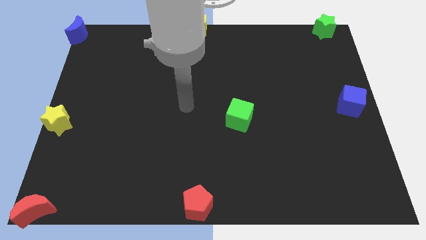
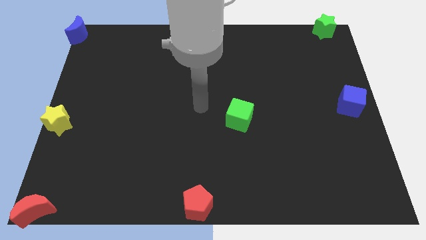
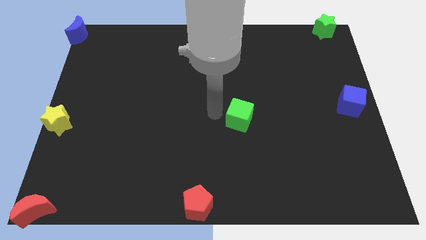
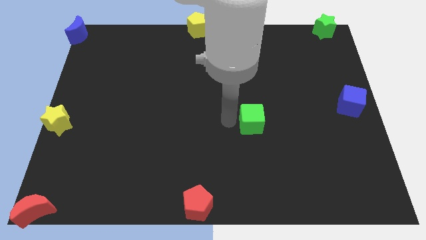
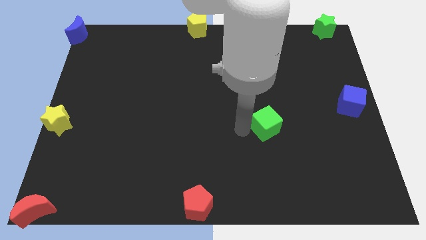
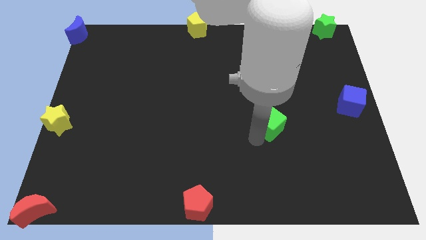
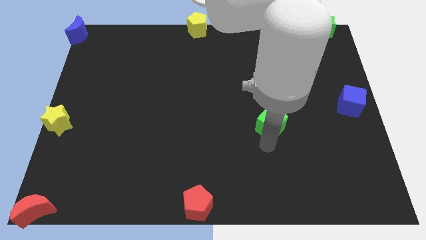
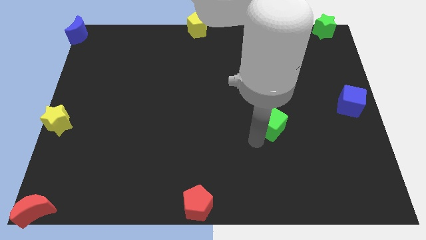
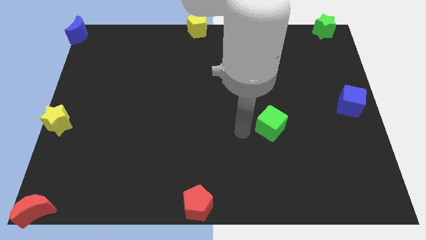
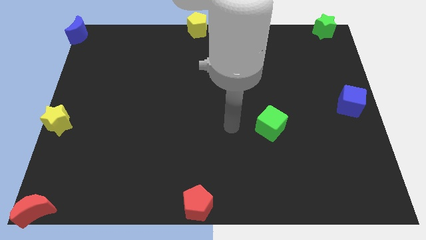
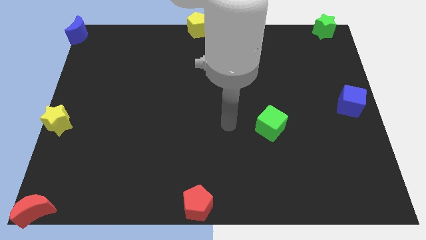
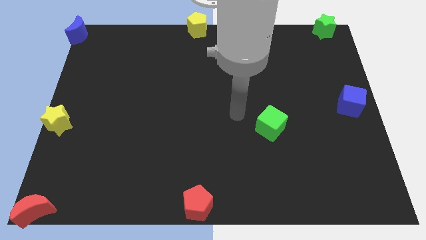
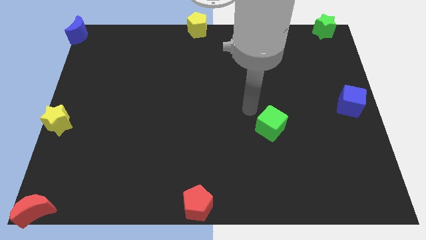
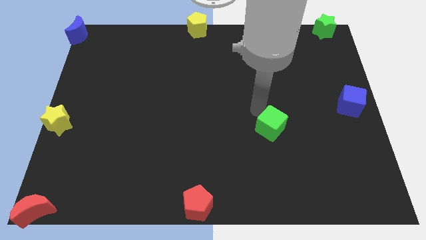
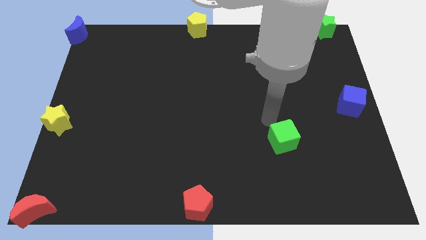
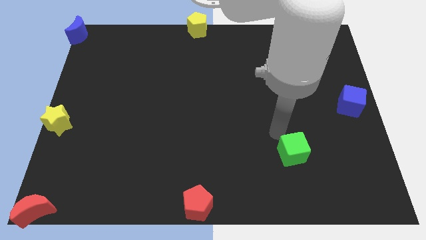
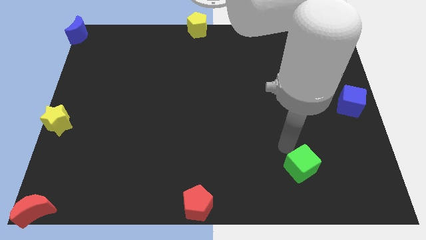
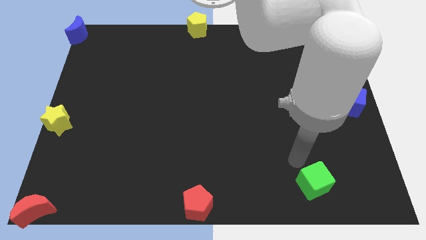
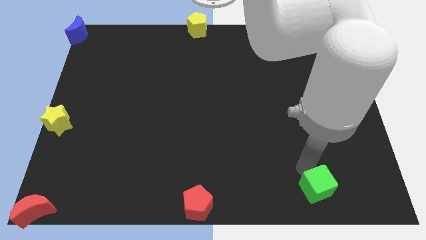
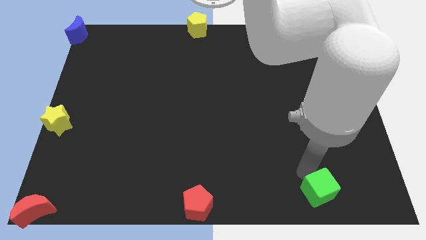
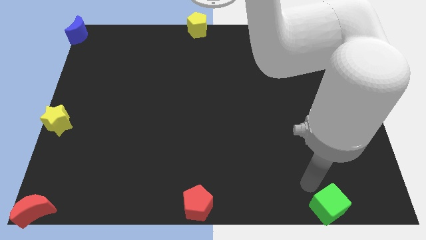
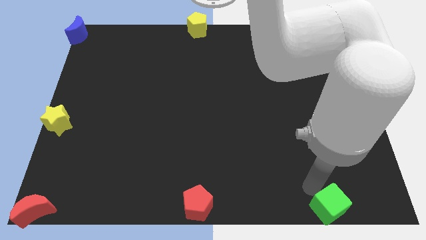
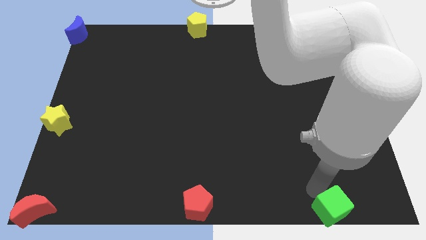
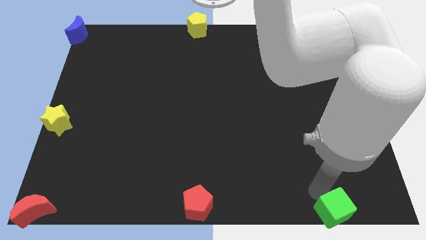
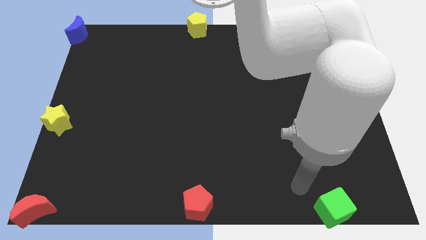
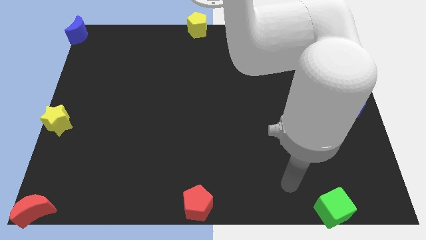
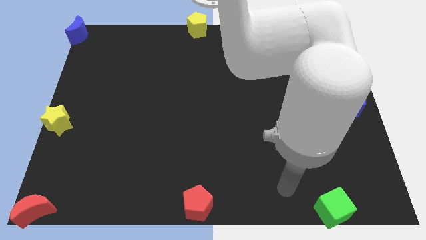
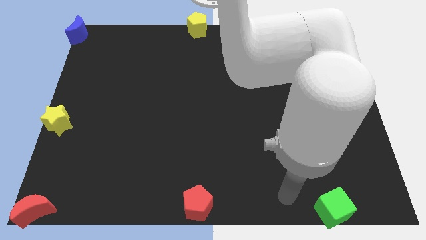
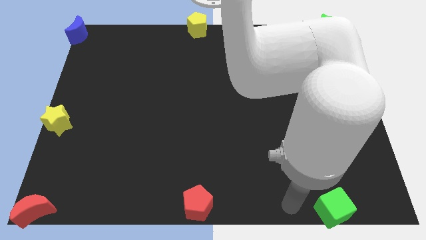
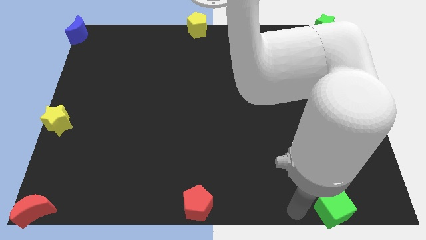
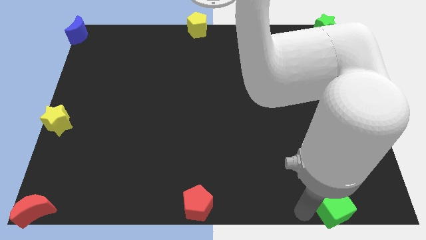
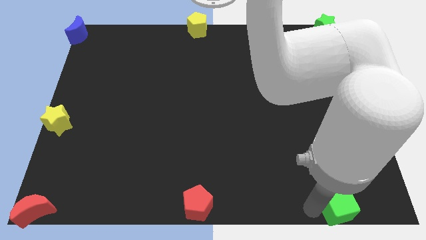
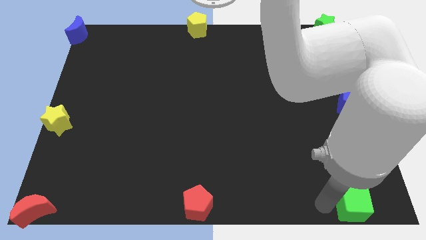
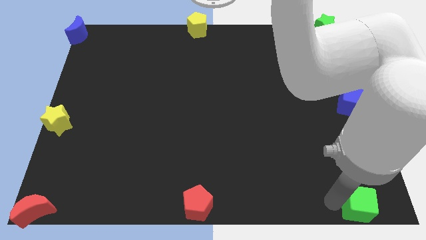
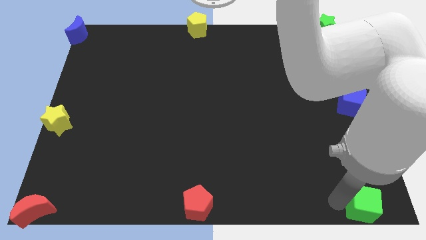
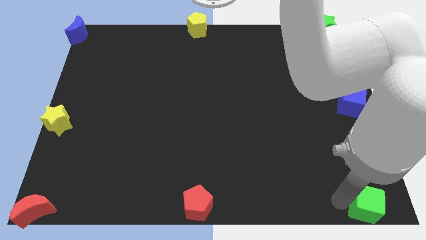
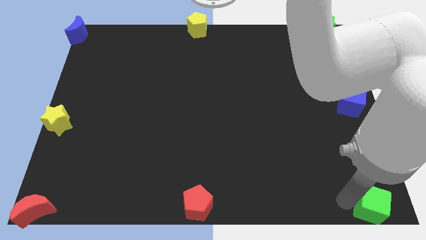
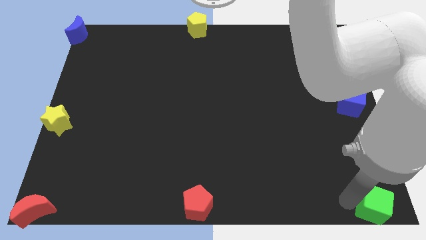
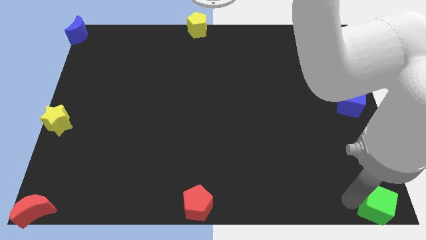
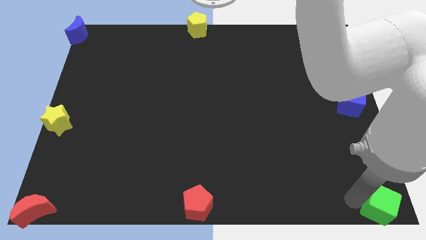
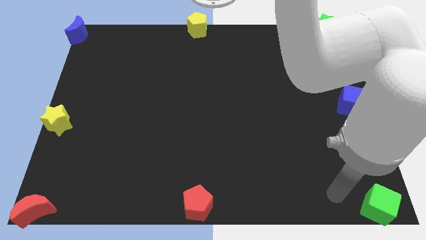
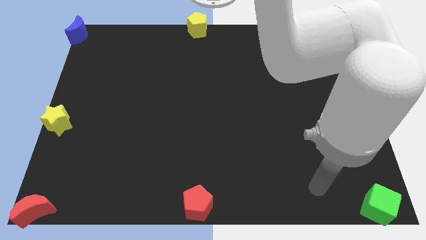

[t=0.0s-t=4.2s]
move the green cube to the bottom right corner

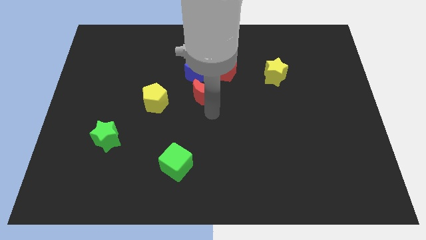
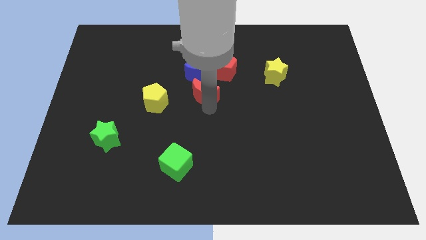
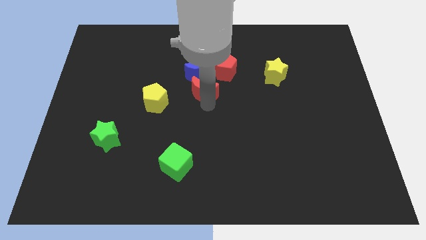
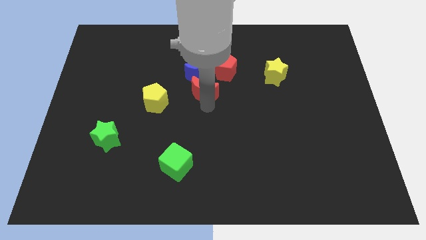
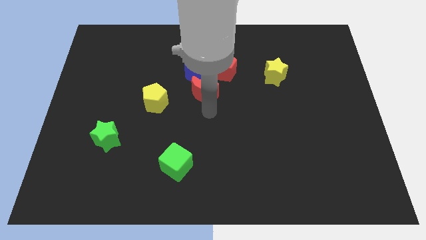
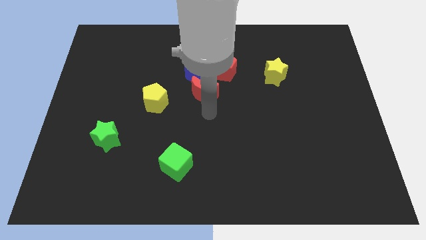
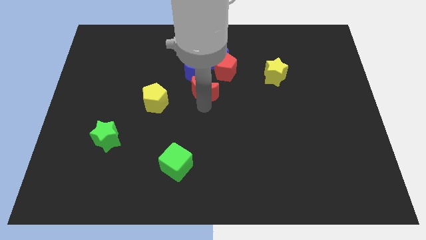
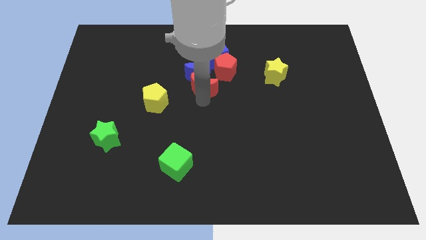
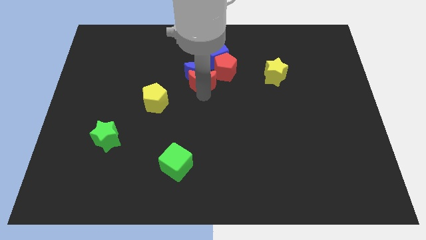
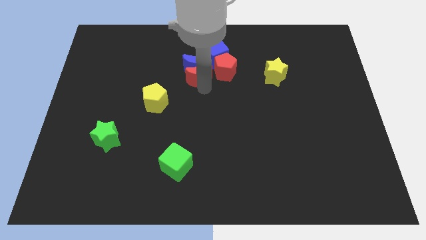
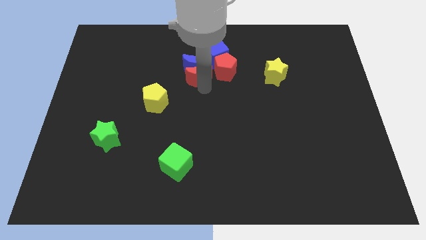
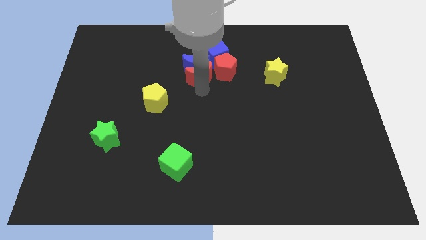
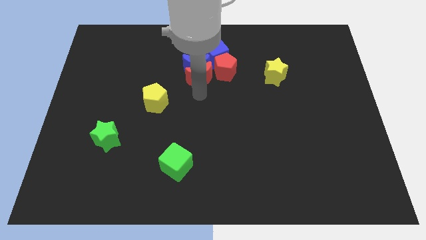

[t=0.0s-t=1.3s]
push the red moon into the blue moon

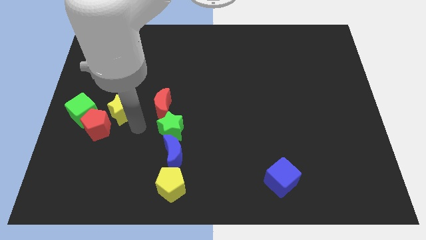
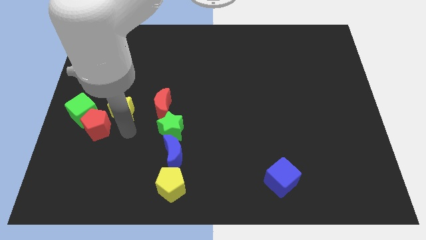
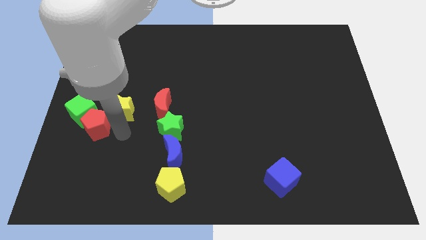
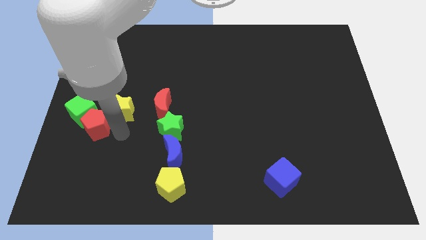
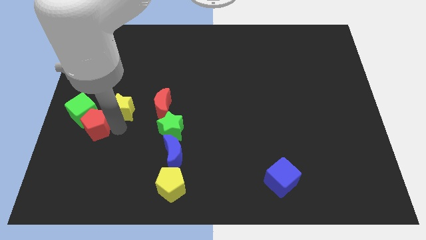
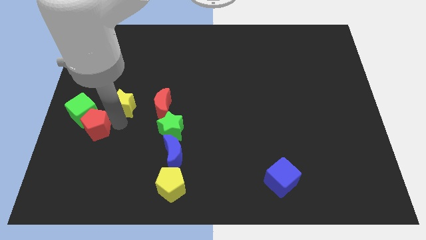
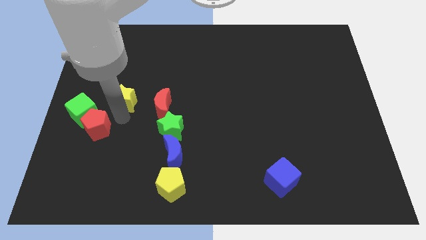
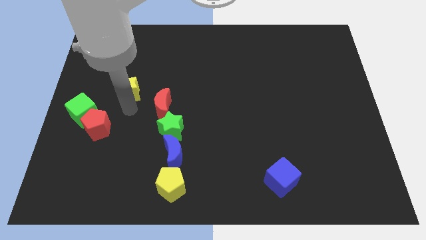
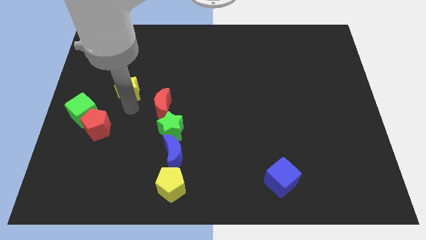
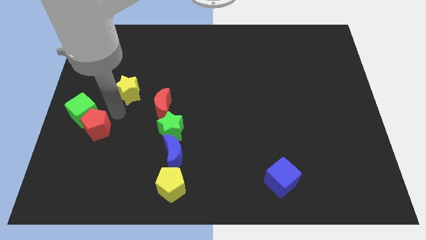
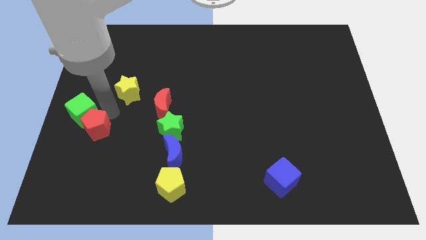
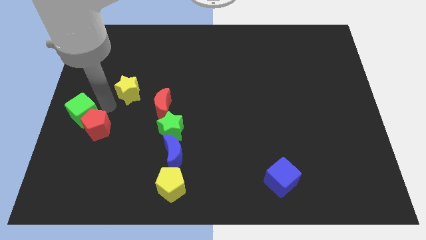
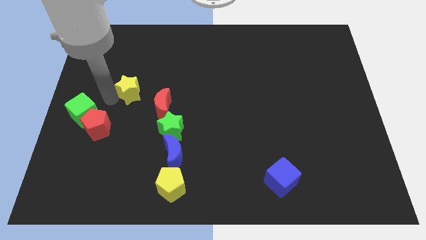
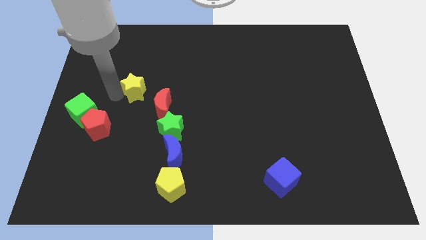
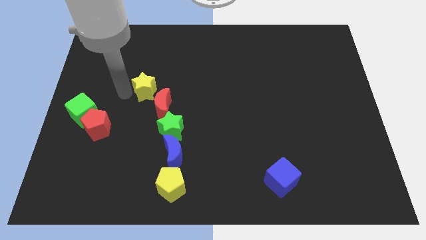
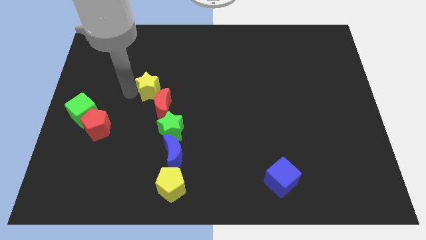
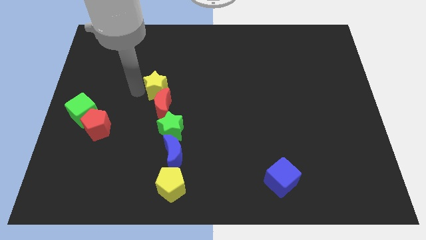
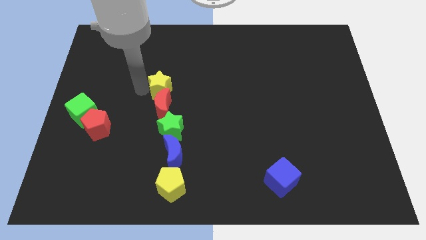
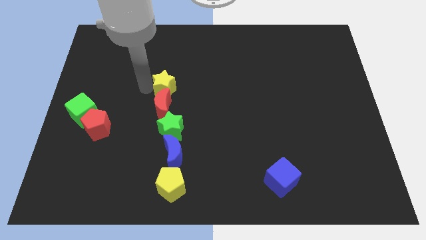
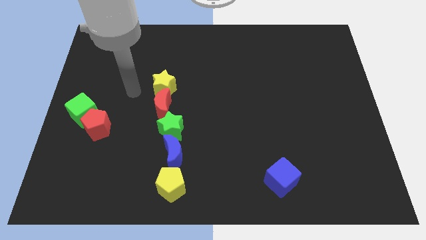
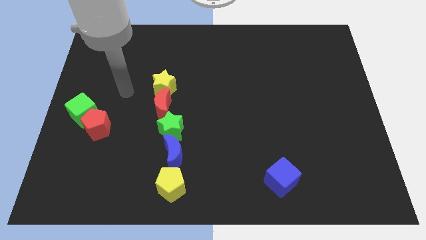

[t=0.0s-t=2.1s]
move the yellow star to the top of the red crescent

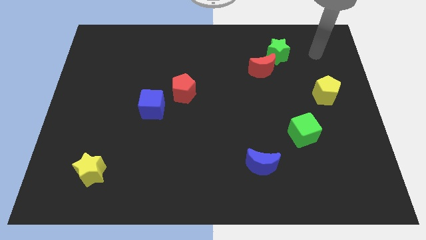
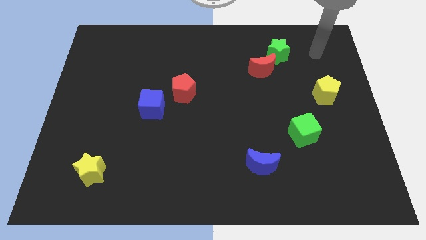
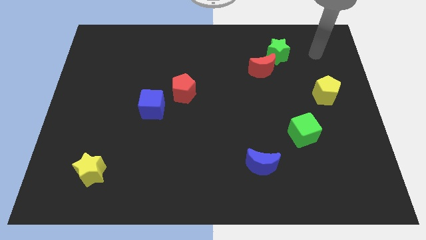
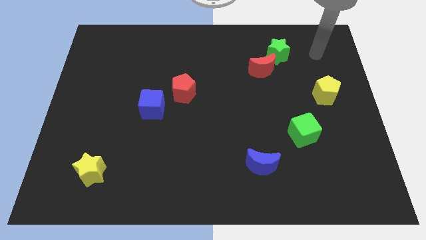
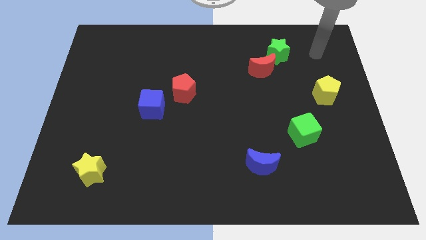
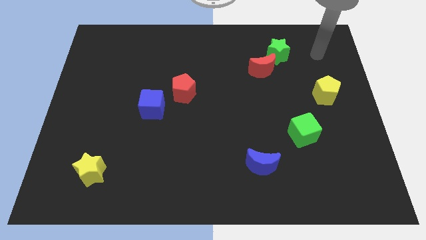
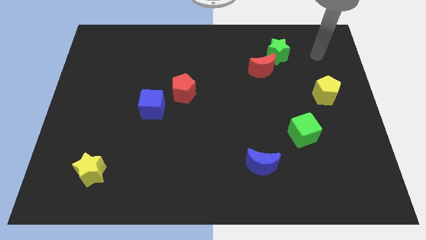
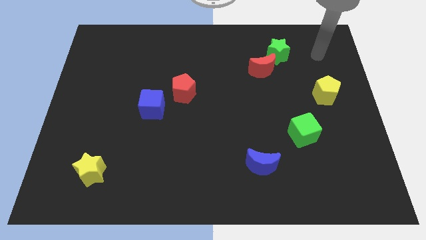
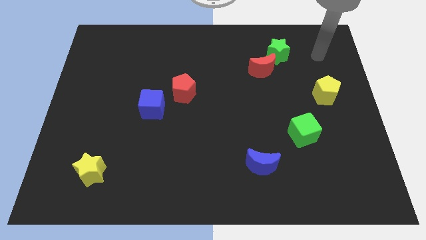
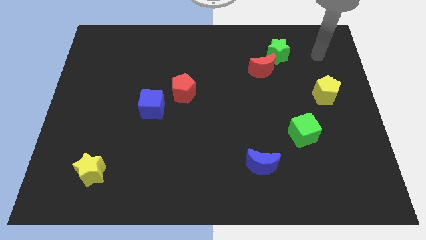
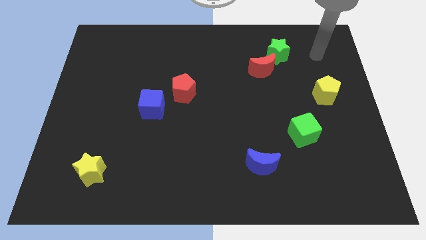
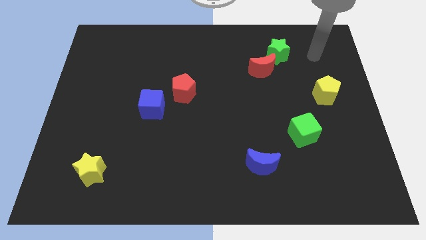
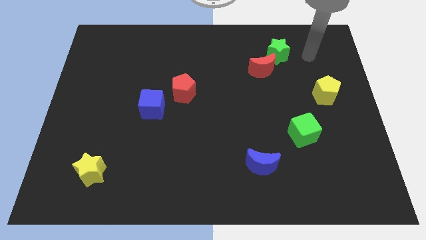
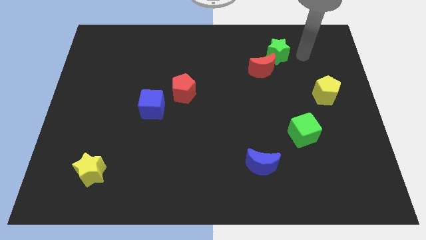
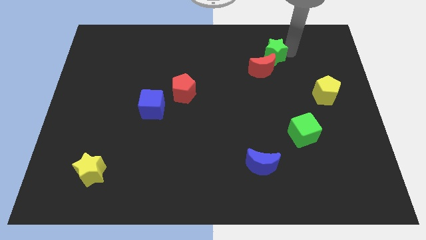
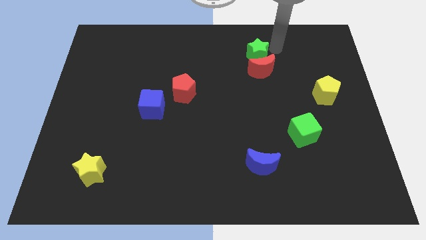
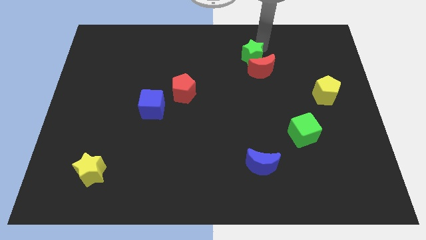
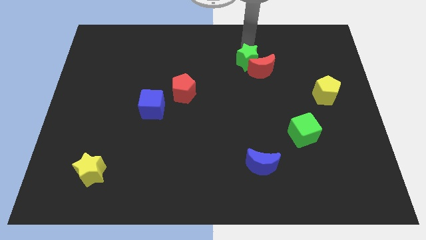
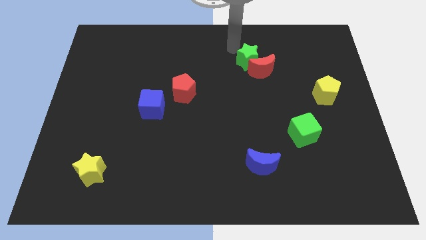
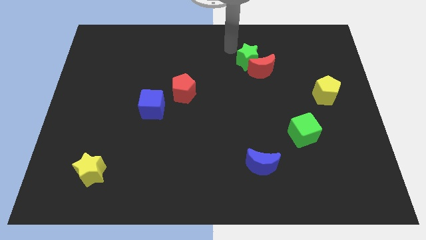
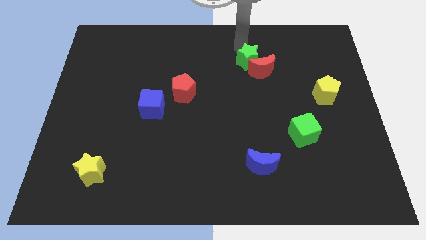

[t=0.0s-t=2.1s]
move green star towards left side of the board
